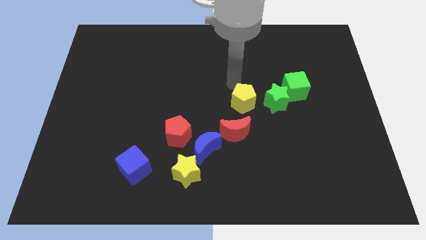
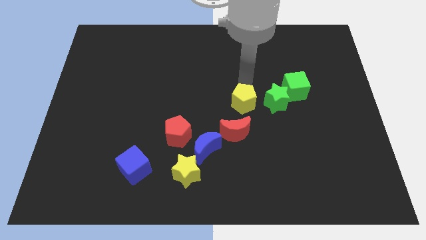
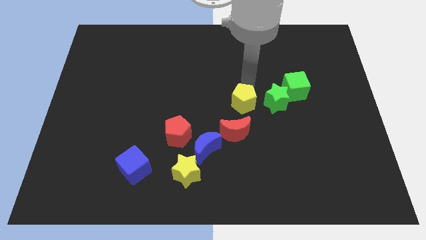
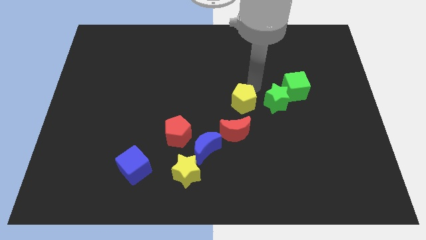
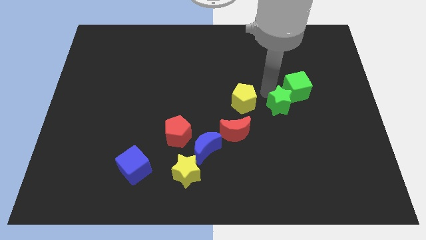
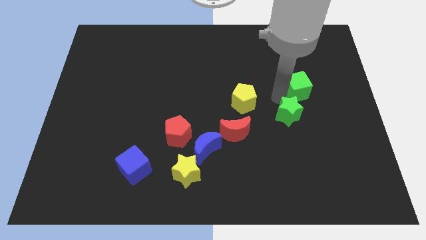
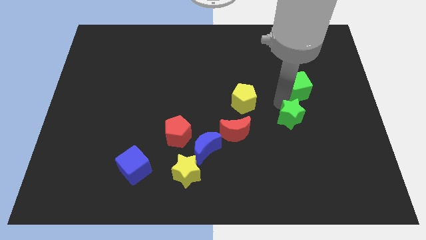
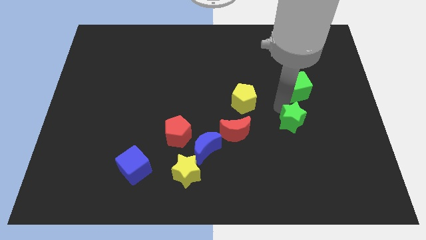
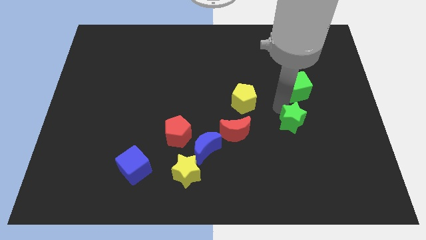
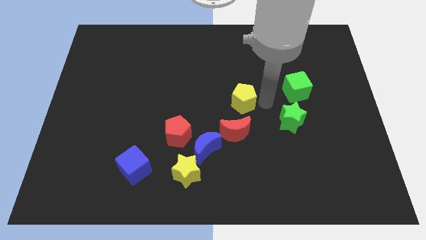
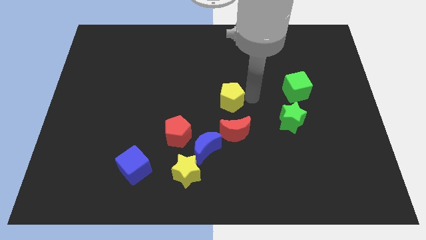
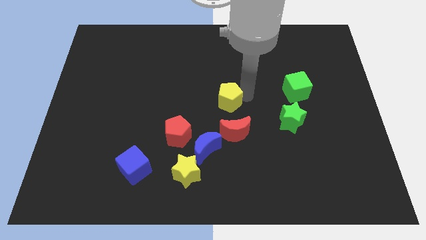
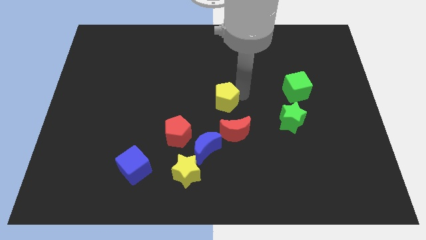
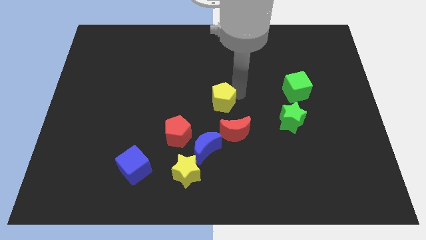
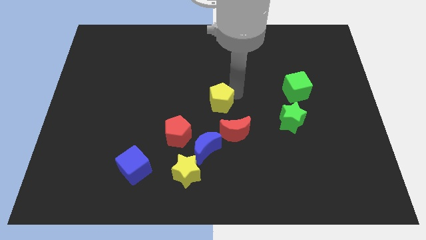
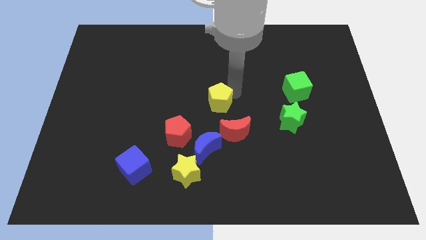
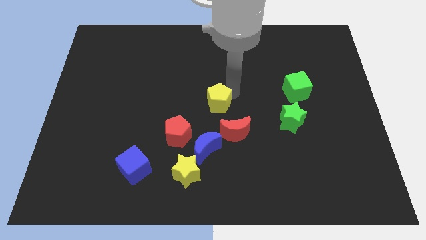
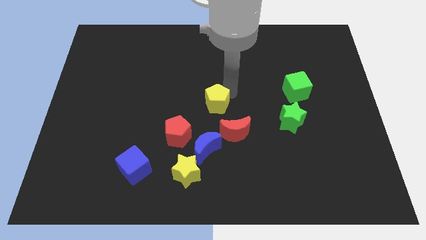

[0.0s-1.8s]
separate the yellow penatgon from group of block

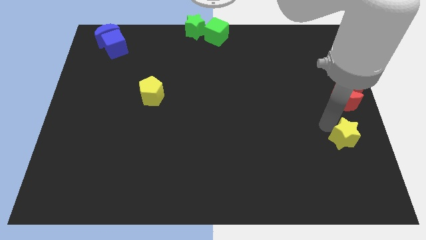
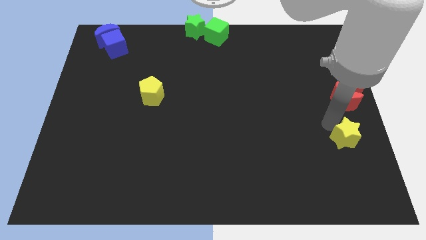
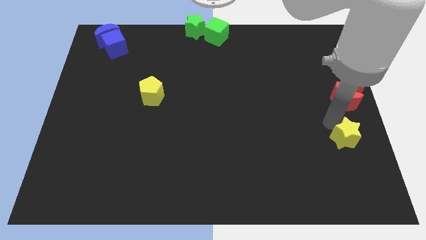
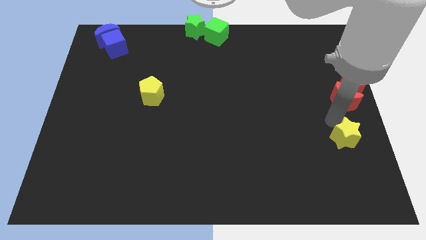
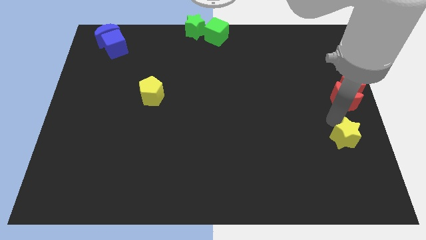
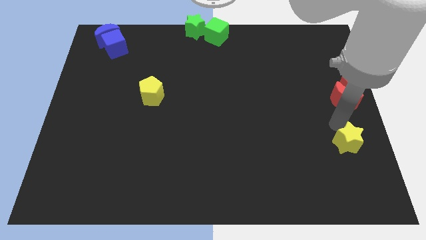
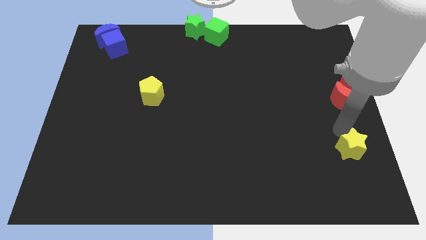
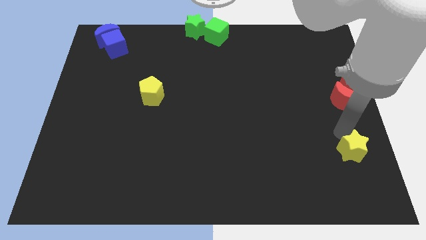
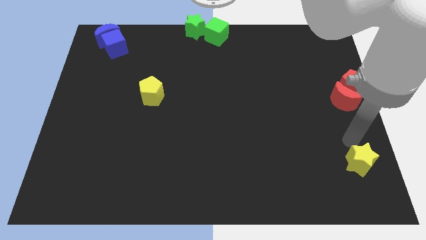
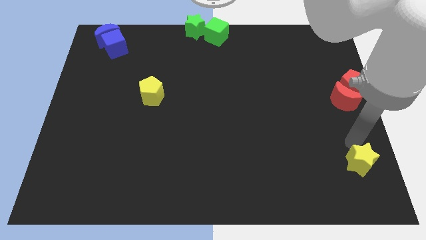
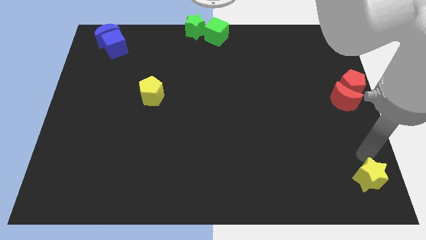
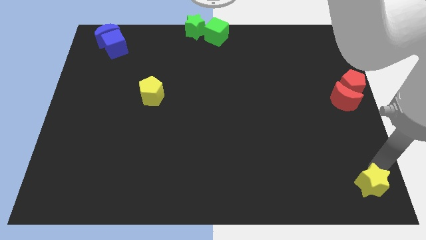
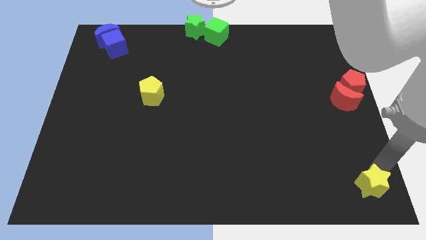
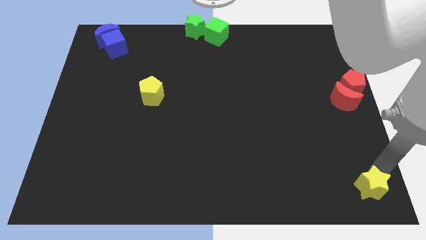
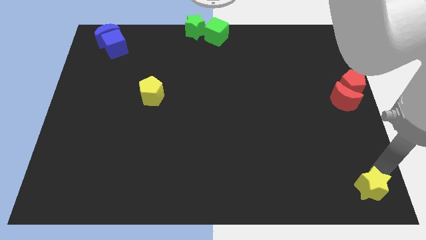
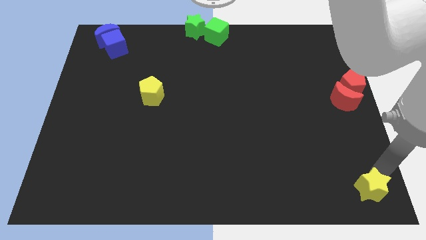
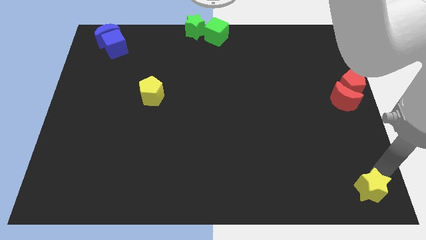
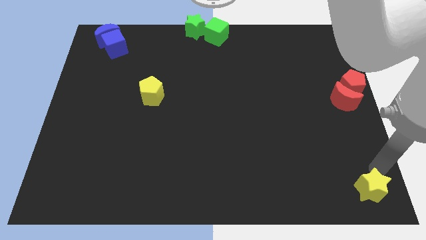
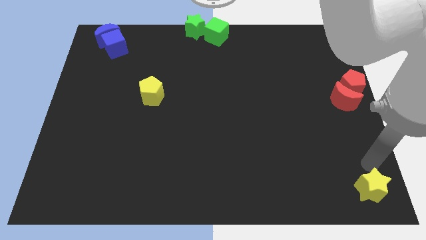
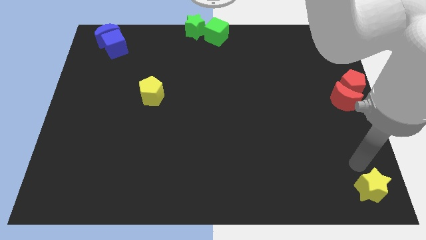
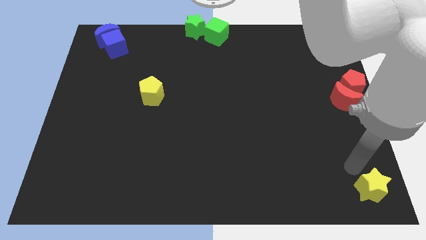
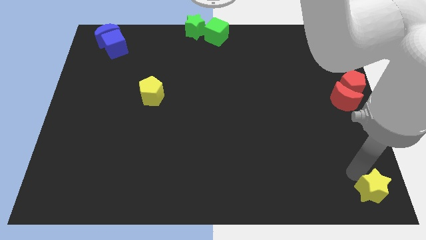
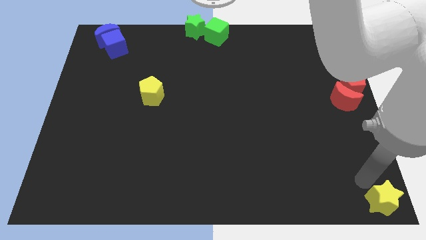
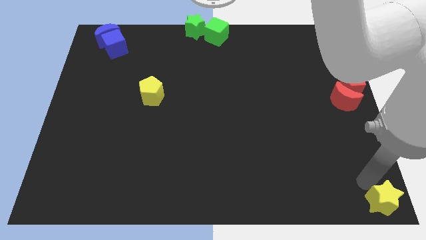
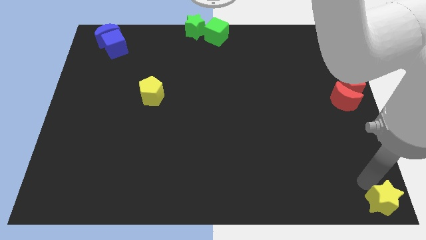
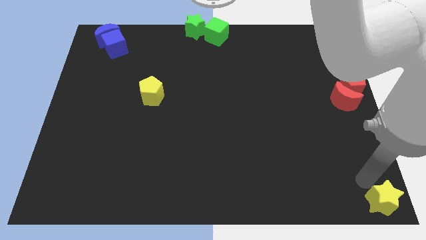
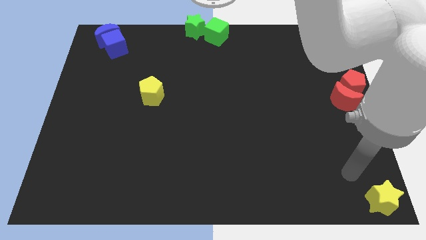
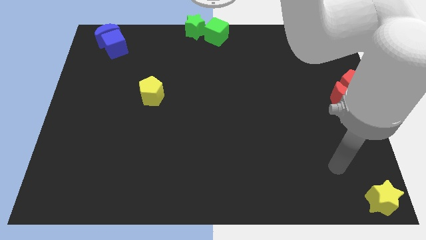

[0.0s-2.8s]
place the yellow star at the bottom right corner of the board

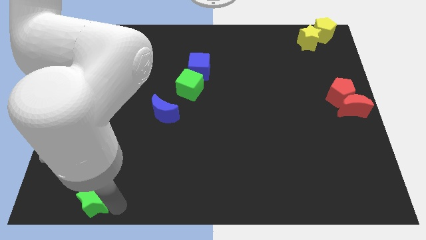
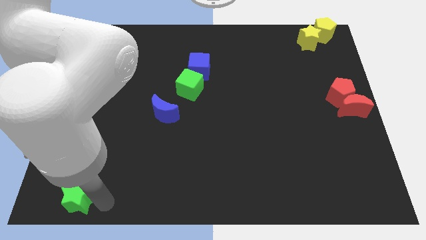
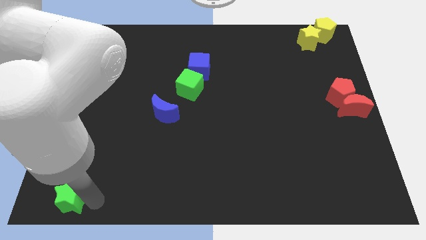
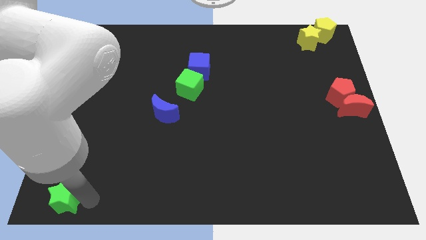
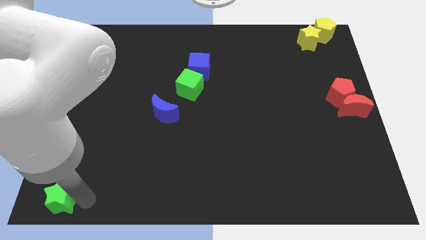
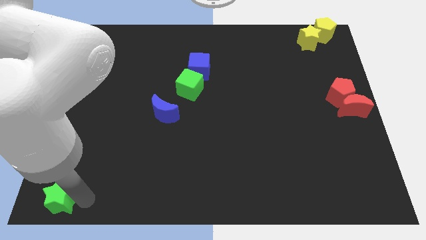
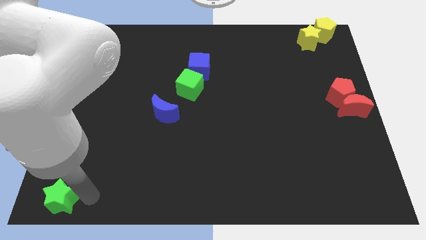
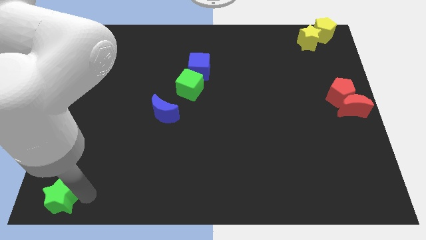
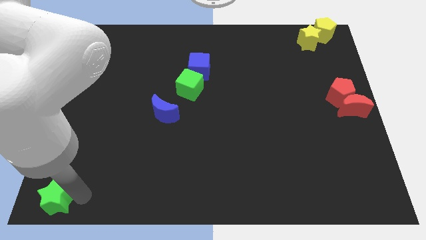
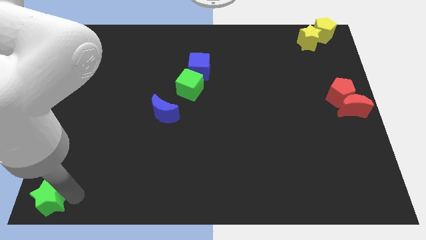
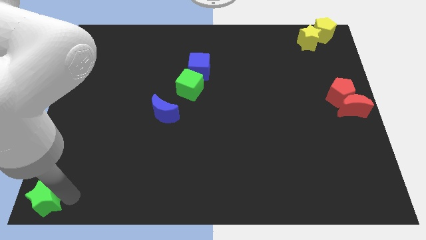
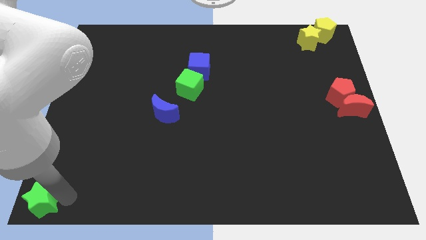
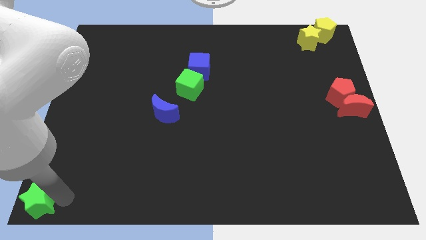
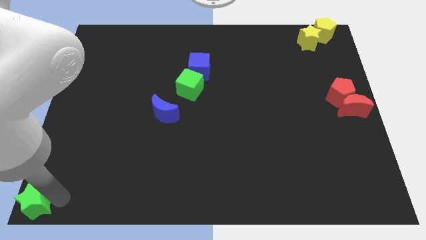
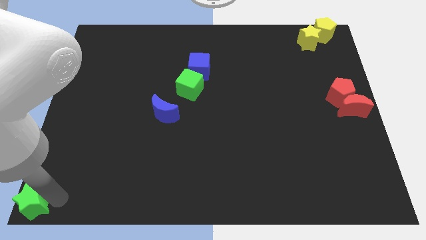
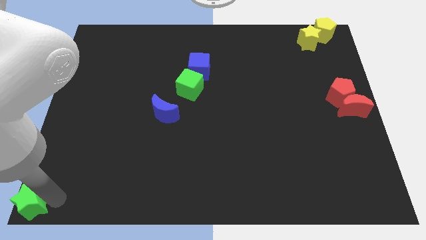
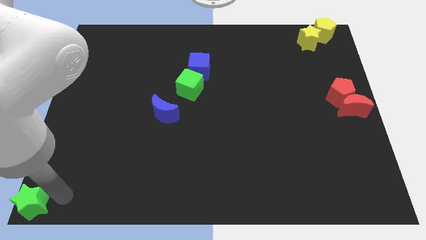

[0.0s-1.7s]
move the green star to the bottom left corner of the board

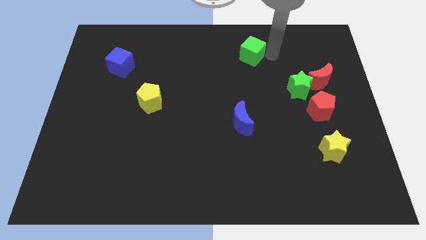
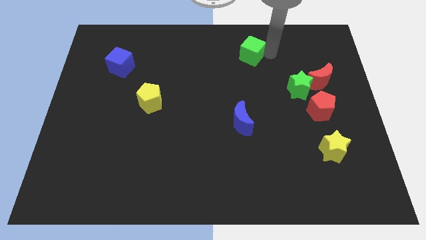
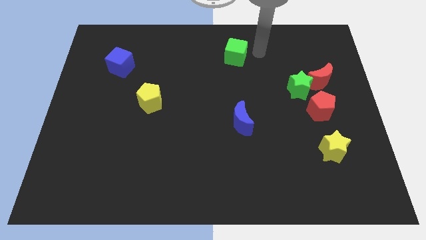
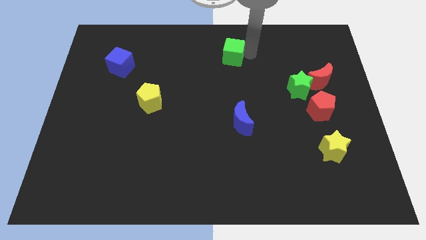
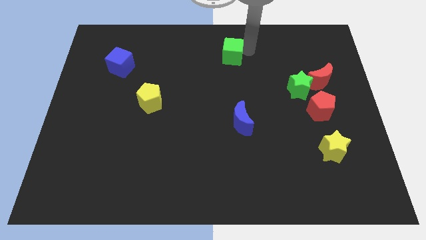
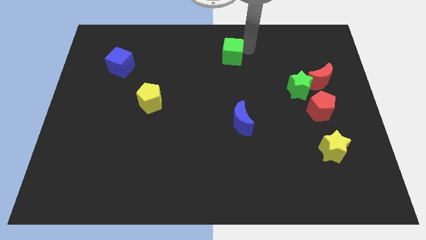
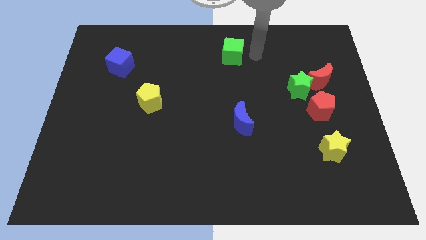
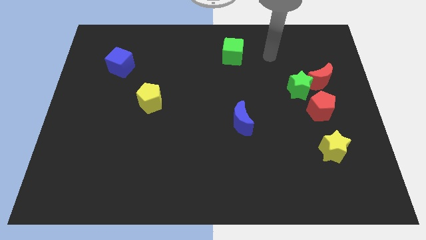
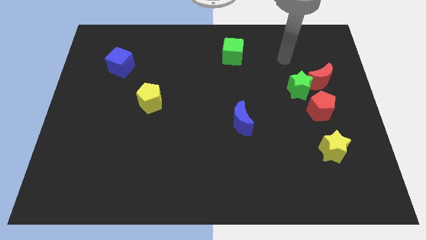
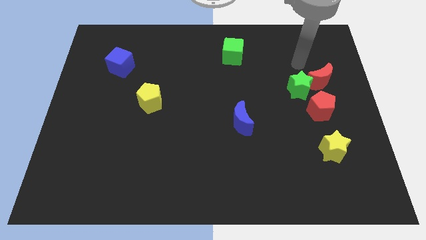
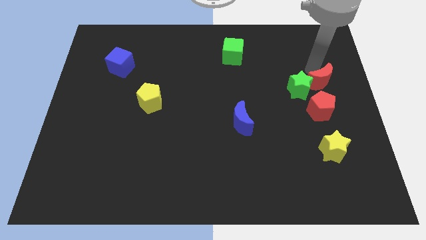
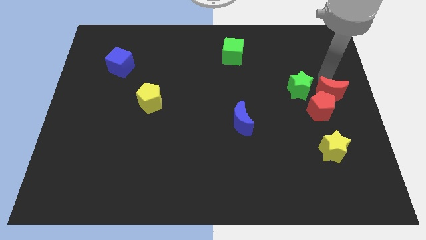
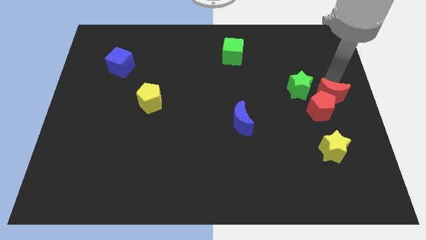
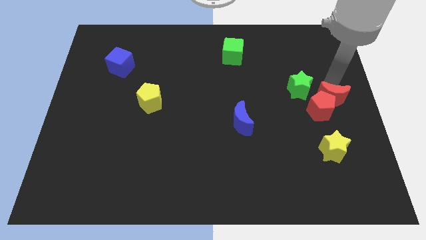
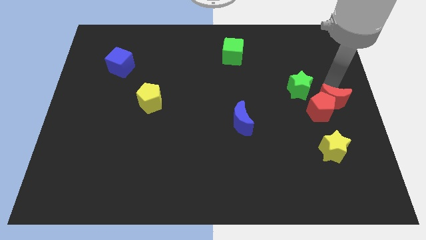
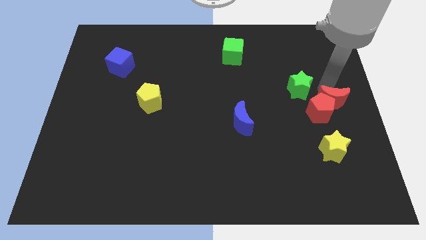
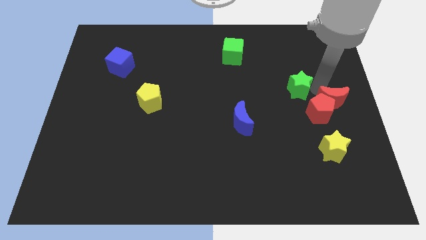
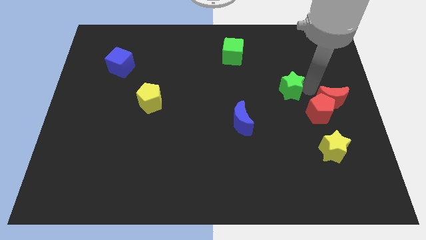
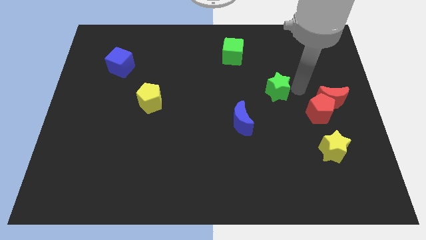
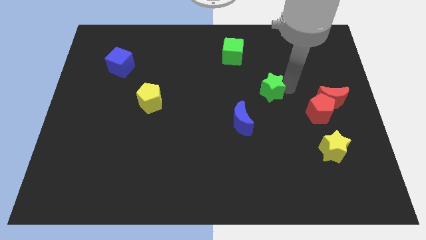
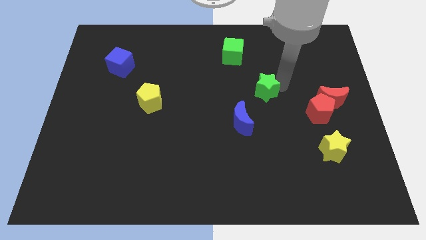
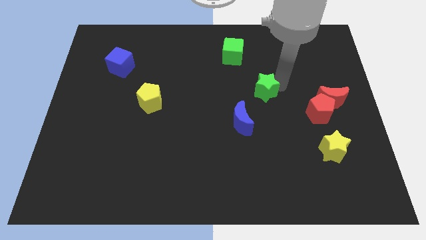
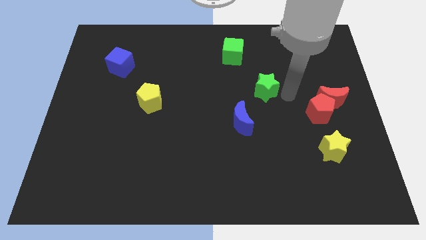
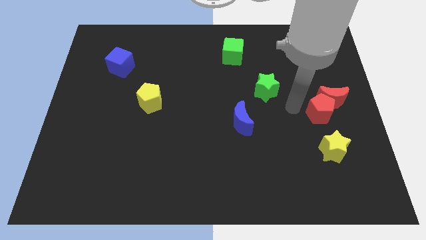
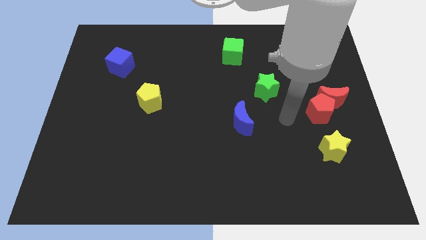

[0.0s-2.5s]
place the green star diagonally bottom right to the green cube

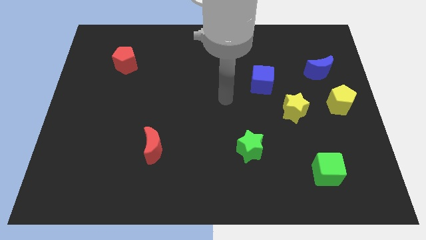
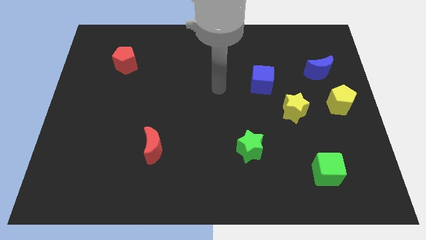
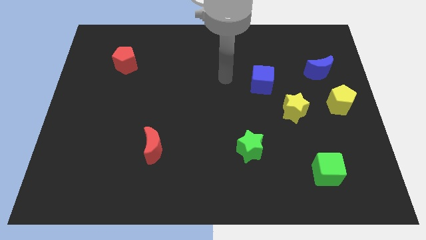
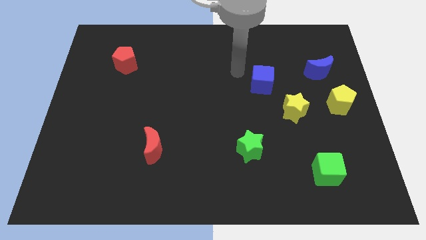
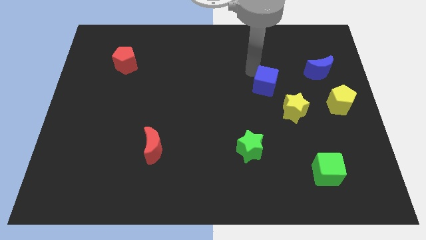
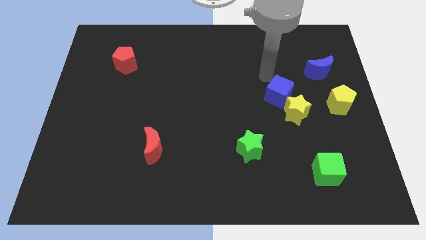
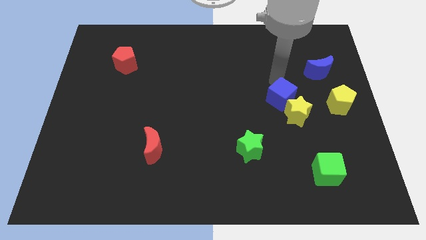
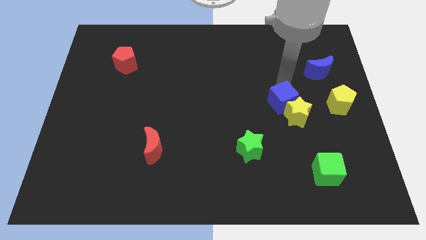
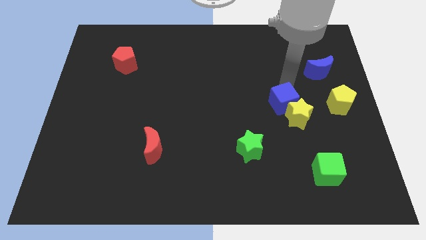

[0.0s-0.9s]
push blue cube towards yellow star
